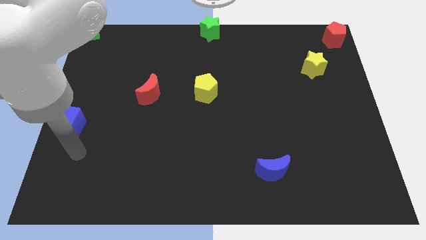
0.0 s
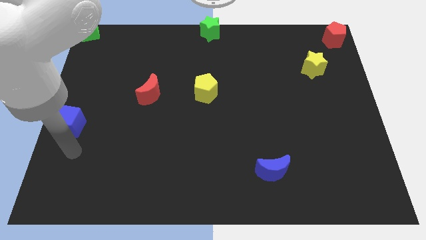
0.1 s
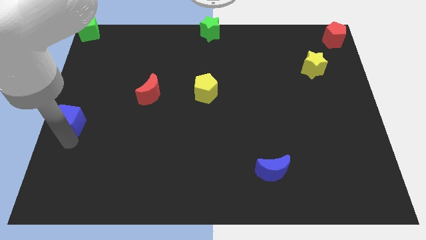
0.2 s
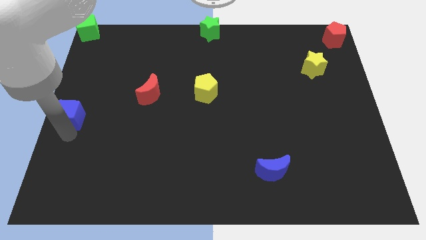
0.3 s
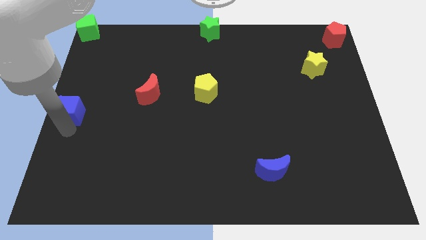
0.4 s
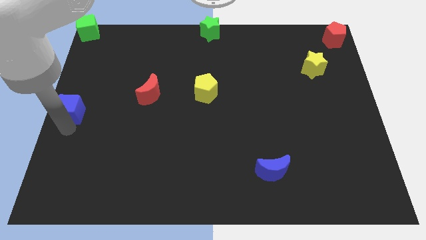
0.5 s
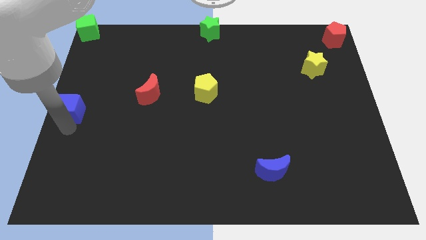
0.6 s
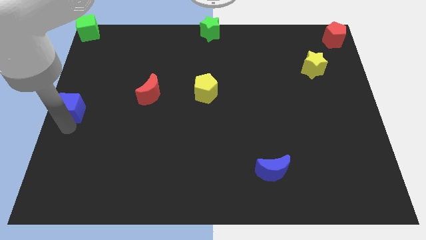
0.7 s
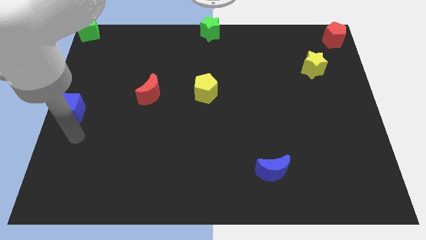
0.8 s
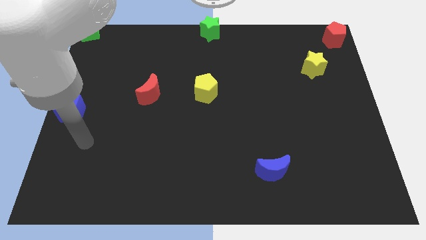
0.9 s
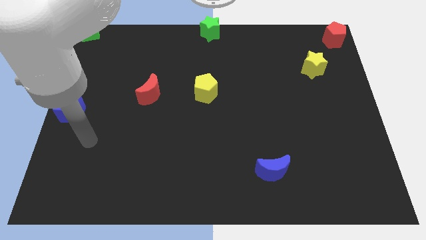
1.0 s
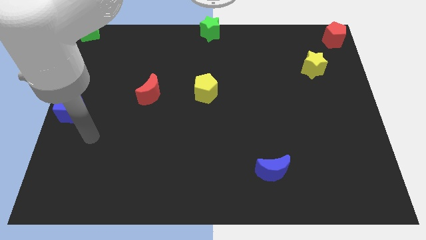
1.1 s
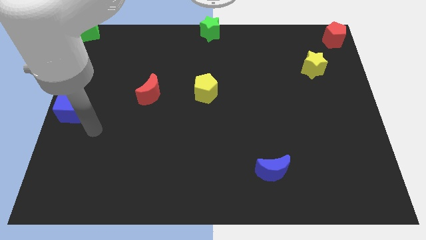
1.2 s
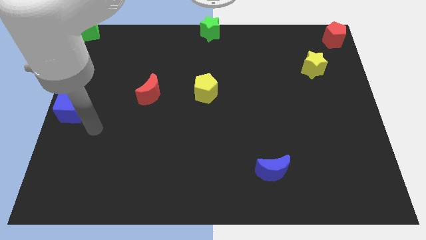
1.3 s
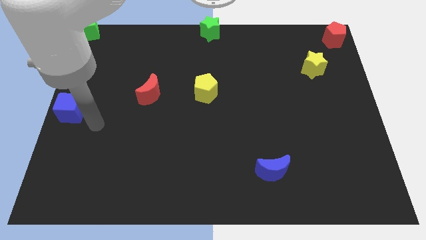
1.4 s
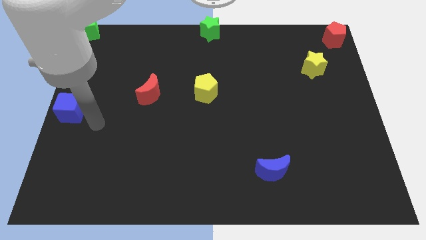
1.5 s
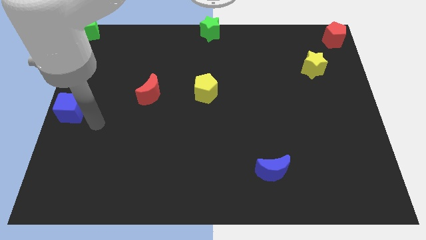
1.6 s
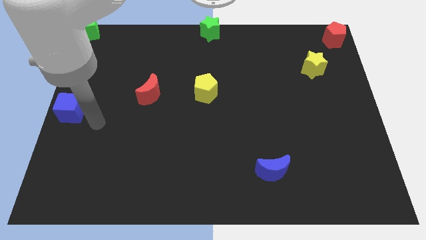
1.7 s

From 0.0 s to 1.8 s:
place blue cube below green cube

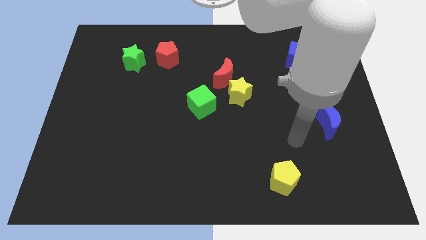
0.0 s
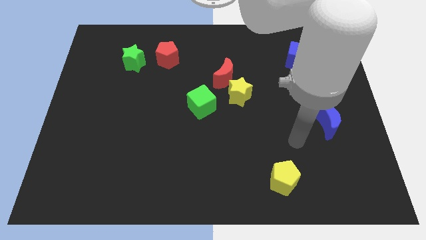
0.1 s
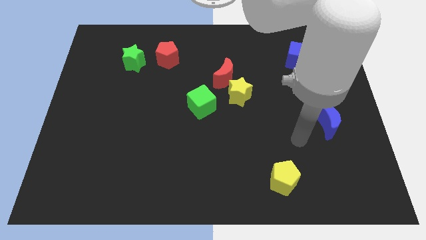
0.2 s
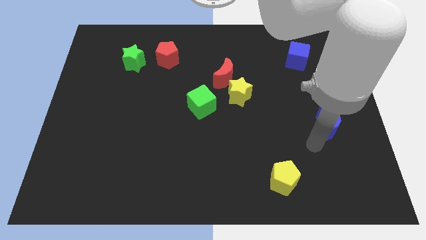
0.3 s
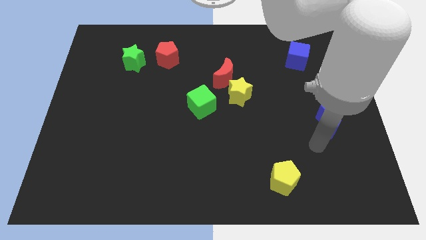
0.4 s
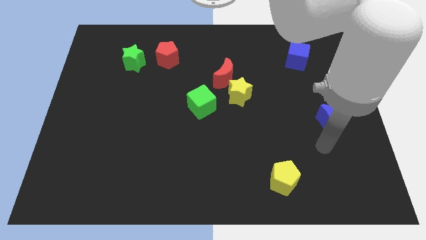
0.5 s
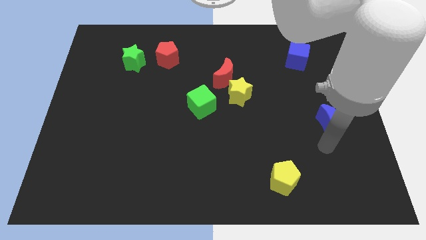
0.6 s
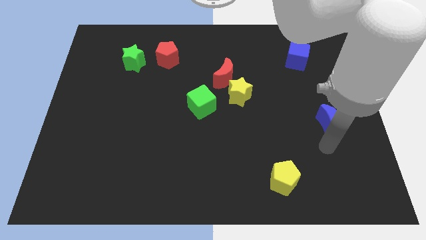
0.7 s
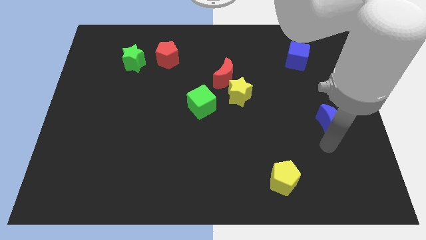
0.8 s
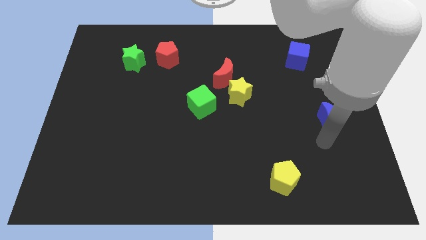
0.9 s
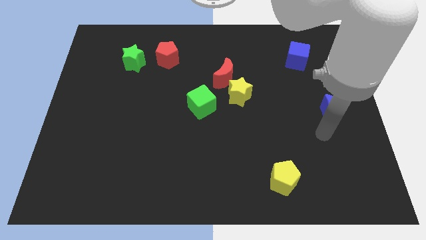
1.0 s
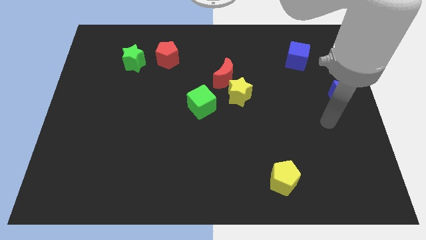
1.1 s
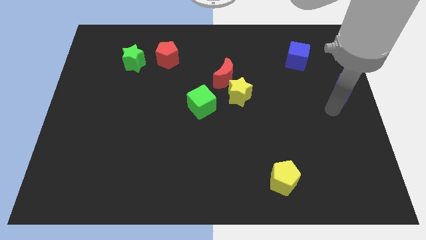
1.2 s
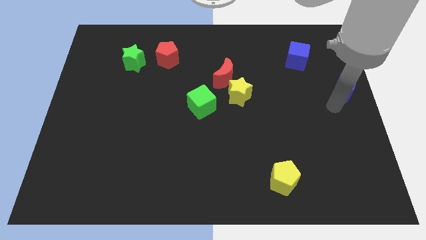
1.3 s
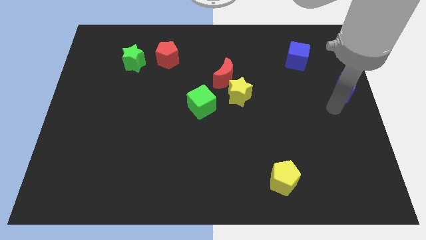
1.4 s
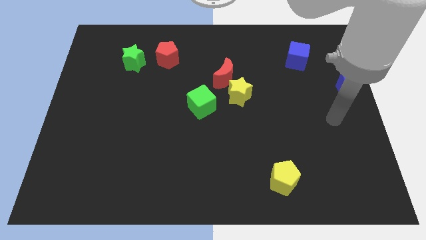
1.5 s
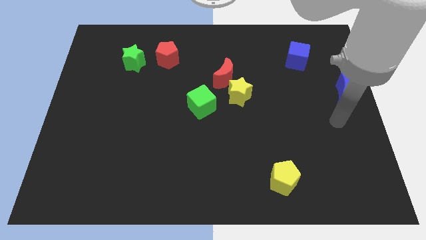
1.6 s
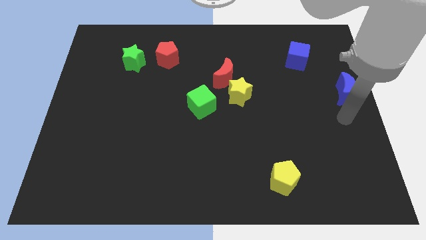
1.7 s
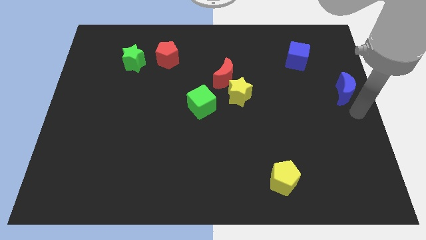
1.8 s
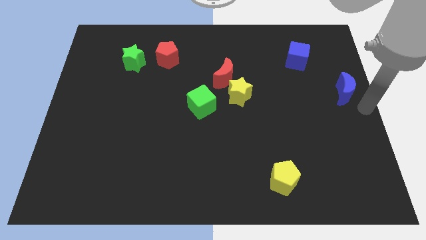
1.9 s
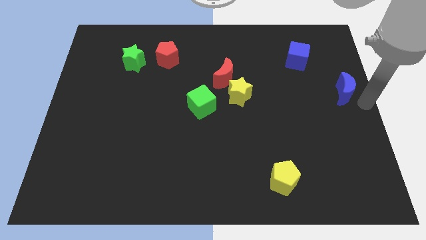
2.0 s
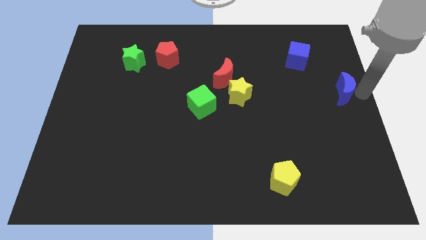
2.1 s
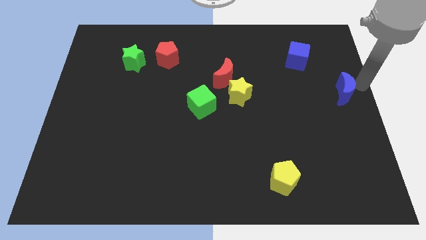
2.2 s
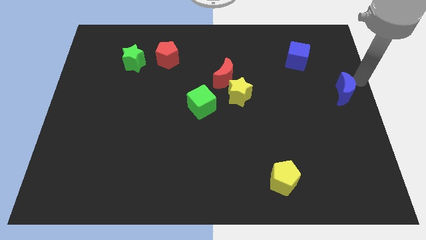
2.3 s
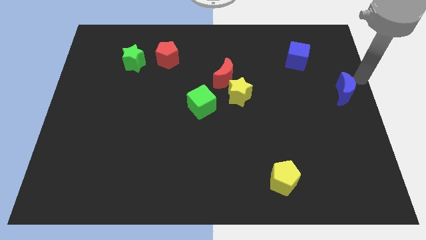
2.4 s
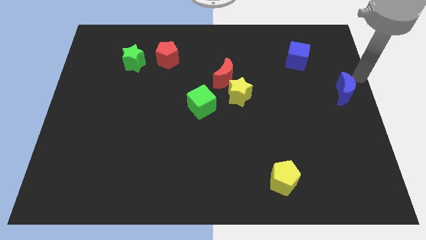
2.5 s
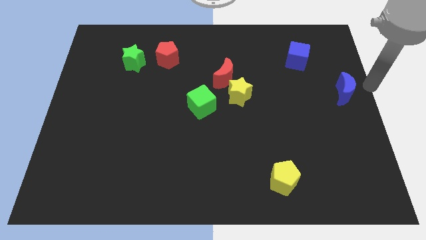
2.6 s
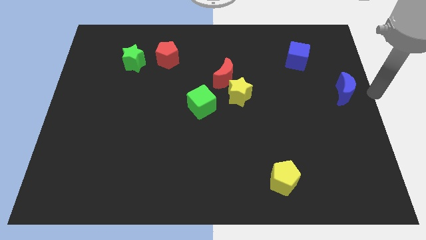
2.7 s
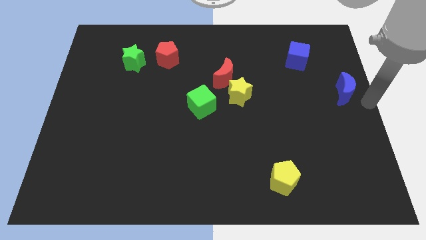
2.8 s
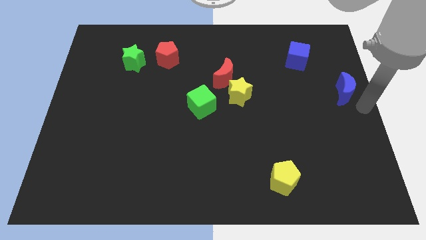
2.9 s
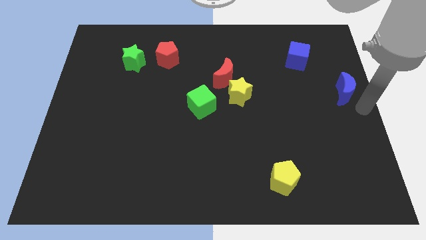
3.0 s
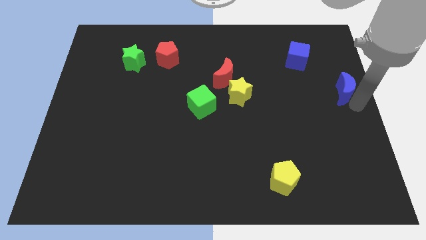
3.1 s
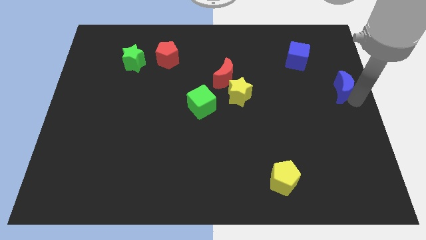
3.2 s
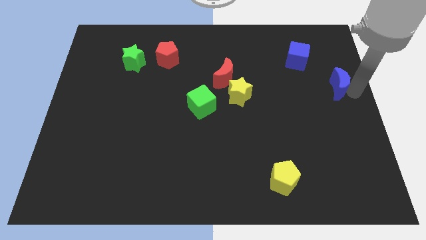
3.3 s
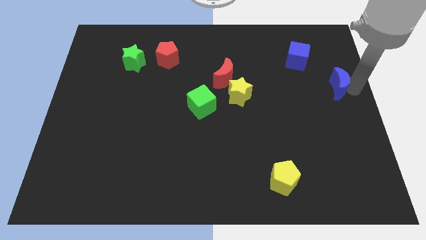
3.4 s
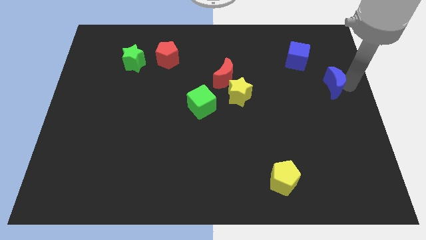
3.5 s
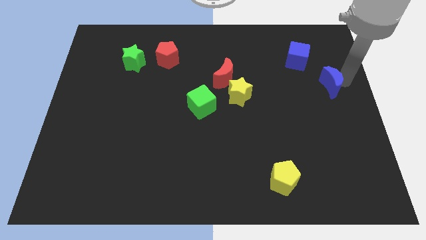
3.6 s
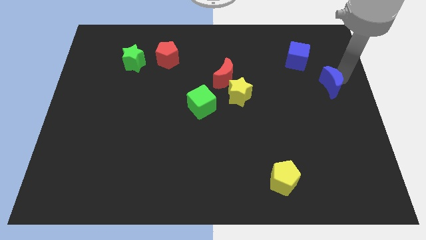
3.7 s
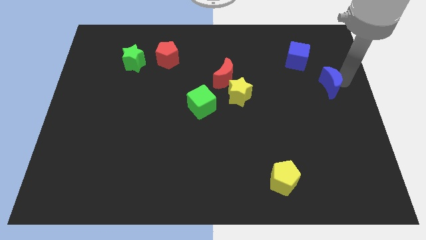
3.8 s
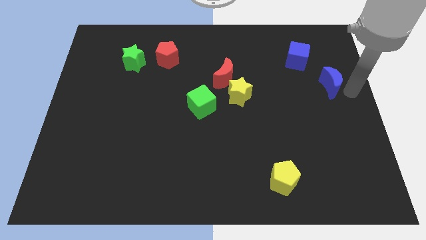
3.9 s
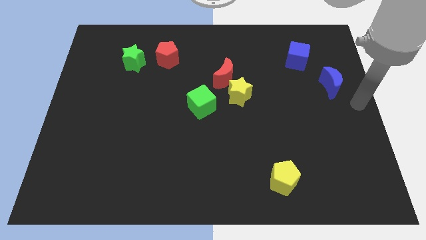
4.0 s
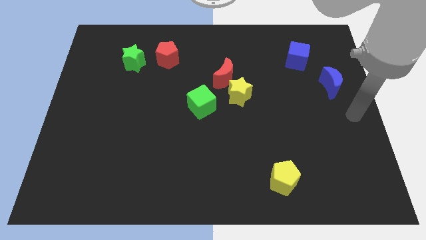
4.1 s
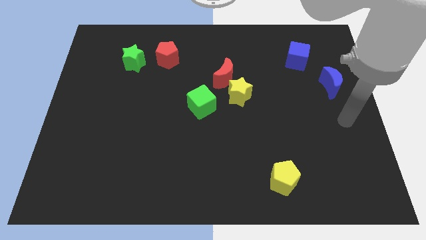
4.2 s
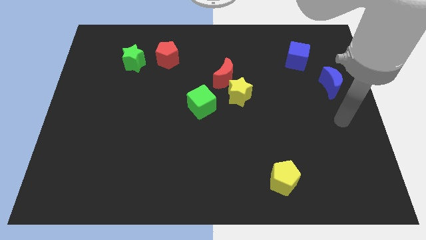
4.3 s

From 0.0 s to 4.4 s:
place the blue moon diagonally to the blue square at the top right side

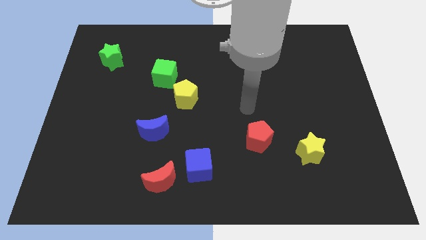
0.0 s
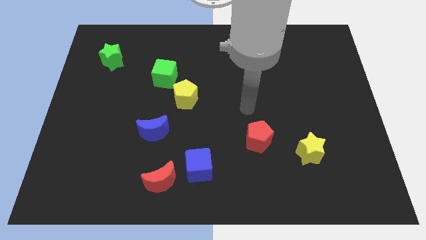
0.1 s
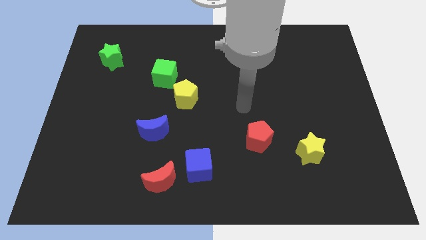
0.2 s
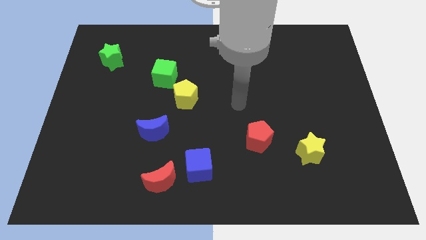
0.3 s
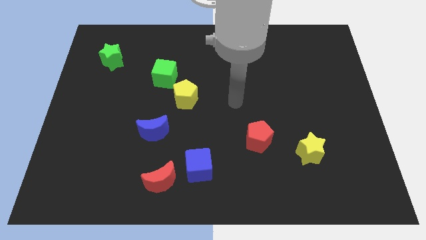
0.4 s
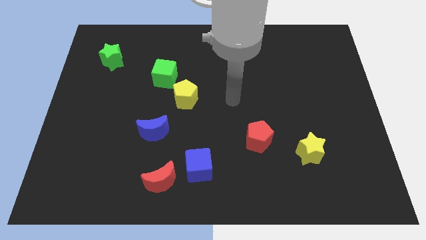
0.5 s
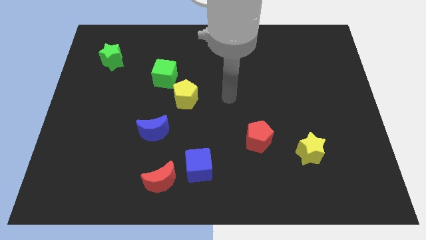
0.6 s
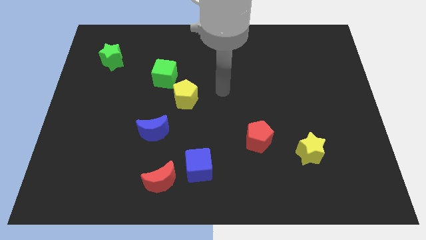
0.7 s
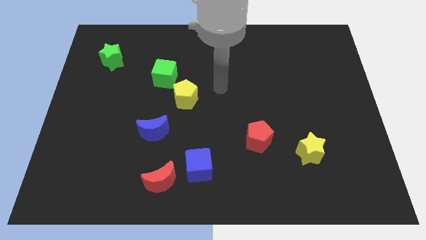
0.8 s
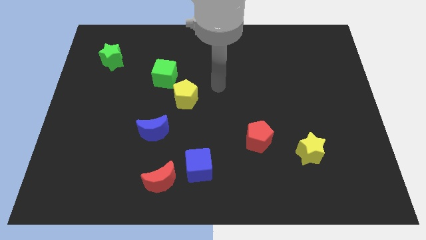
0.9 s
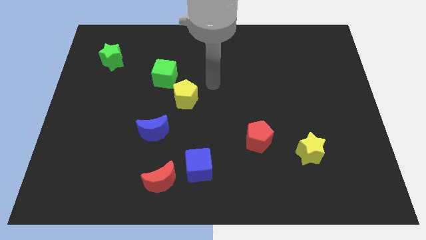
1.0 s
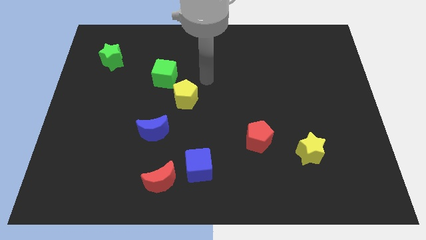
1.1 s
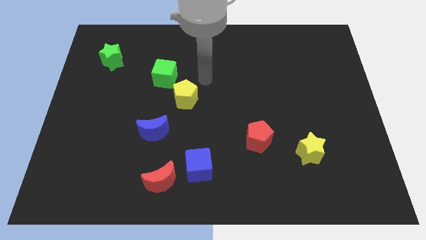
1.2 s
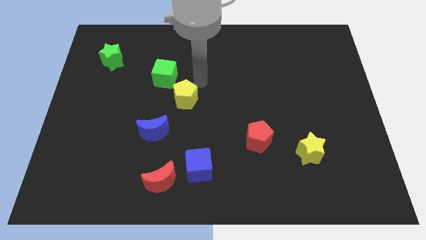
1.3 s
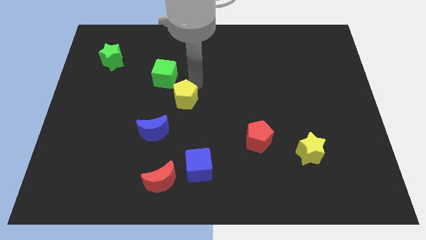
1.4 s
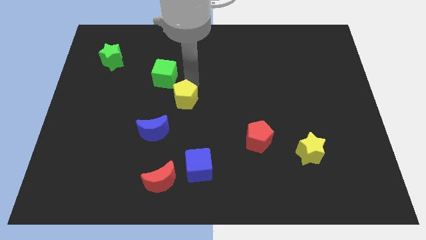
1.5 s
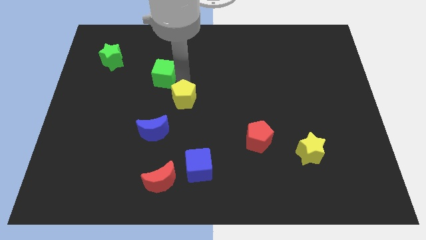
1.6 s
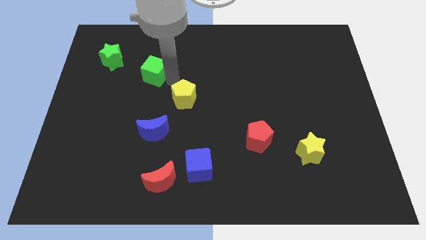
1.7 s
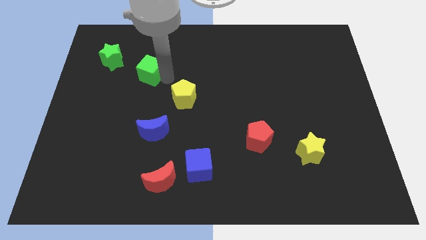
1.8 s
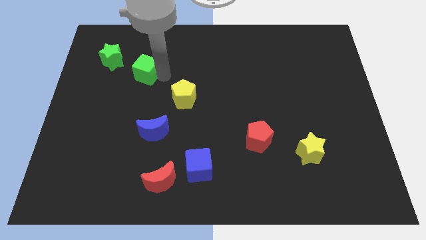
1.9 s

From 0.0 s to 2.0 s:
separate green cube from the yellow pentagon

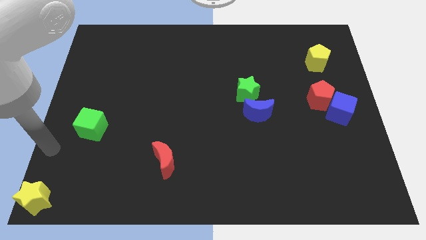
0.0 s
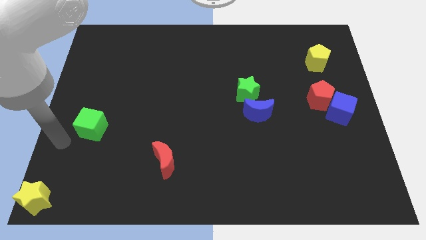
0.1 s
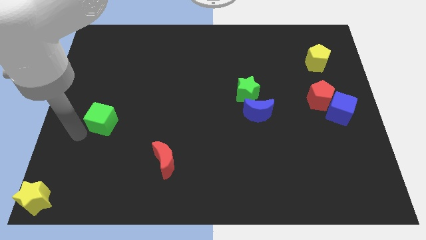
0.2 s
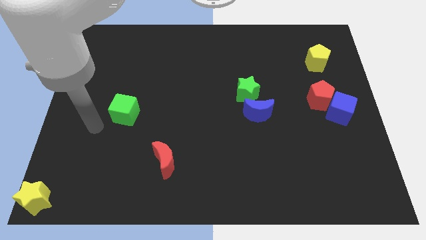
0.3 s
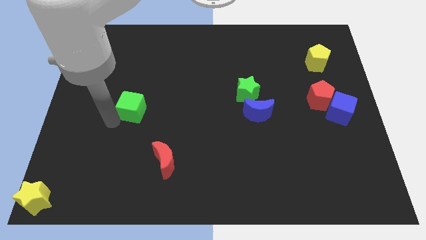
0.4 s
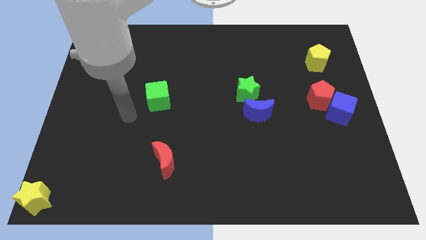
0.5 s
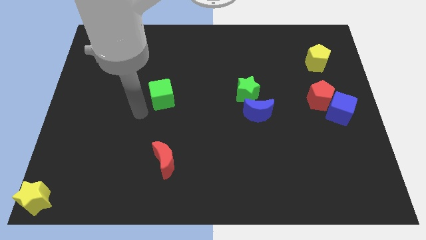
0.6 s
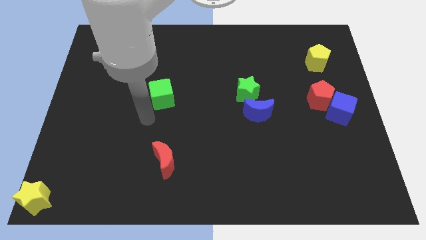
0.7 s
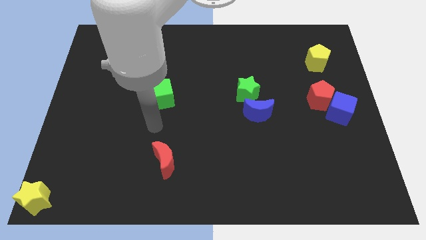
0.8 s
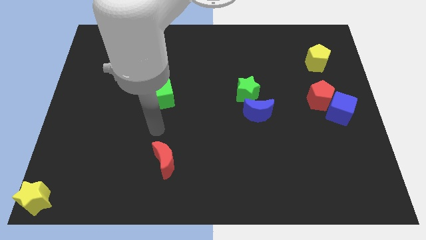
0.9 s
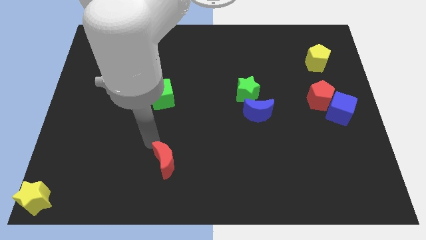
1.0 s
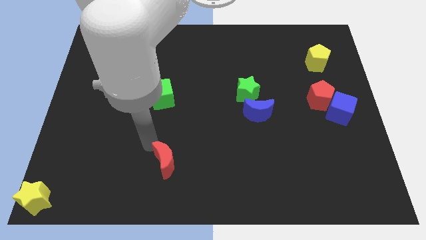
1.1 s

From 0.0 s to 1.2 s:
push the green cube diagonally to the top
